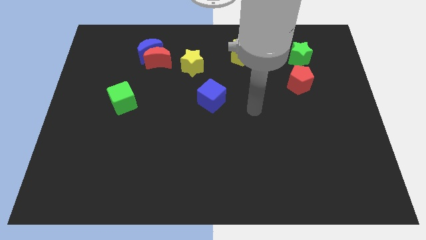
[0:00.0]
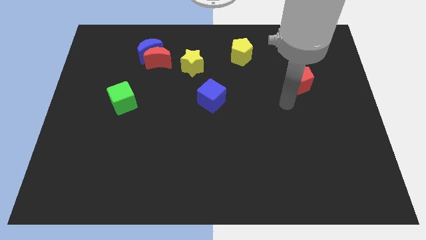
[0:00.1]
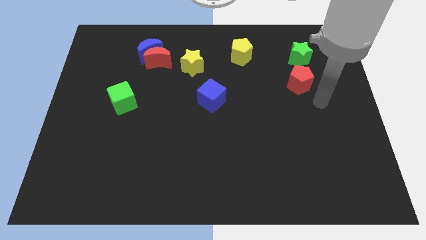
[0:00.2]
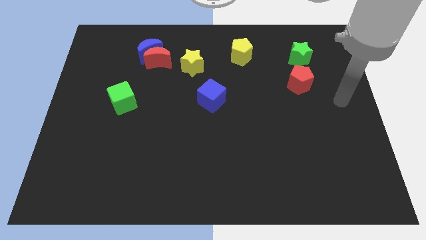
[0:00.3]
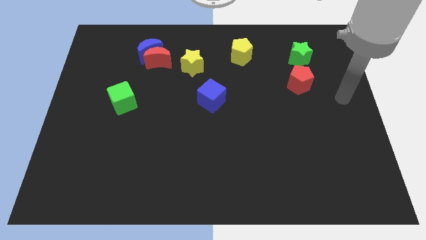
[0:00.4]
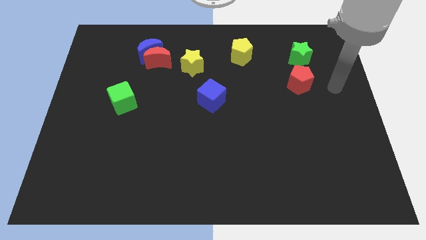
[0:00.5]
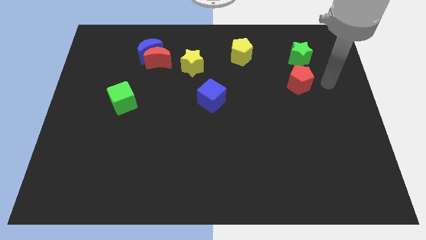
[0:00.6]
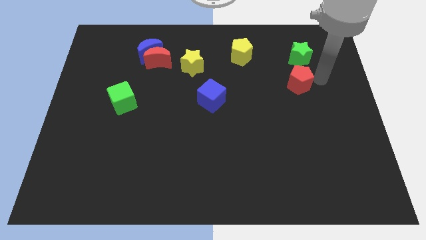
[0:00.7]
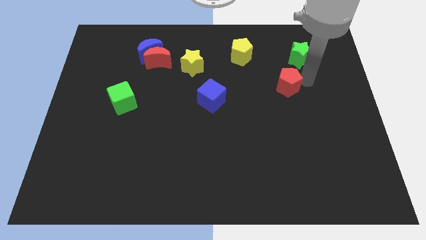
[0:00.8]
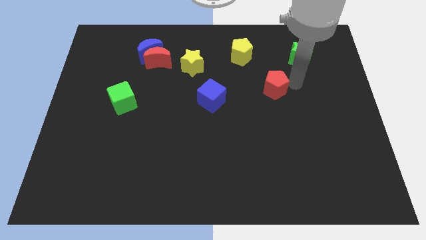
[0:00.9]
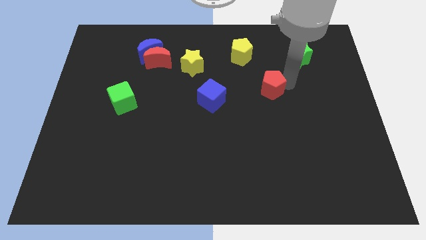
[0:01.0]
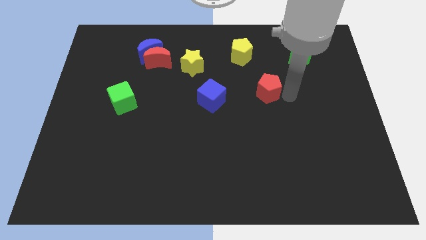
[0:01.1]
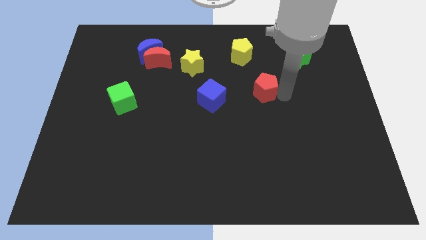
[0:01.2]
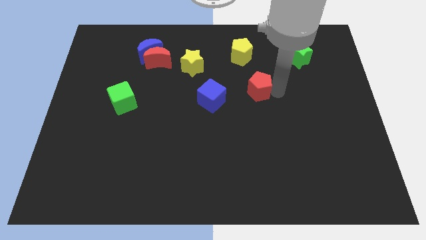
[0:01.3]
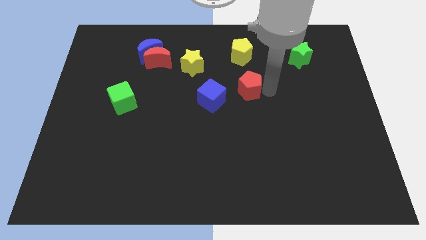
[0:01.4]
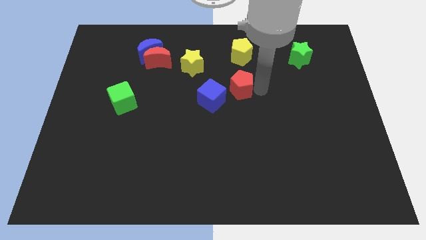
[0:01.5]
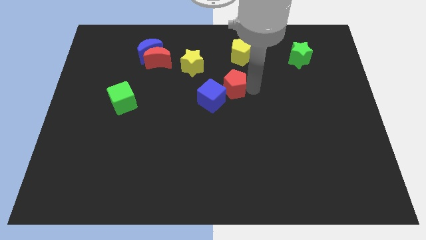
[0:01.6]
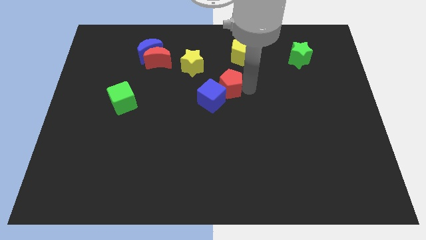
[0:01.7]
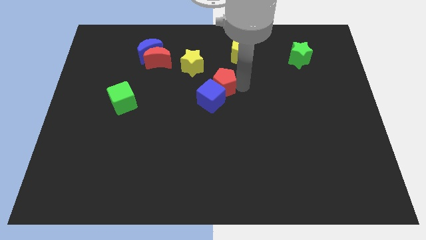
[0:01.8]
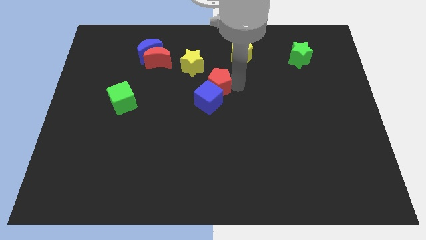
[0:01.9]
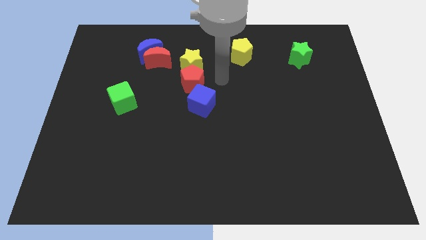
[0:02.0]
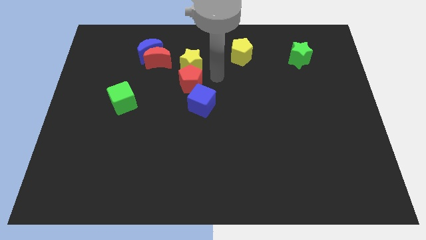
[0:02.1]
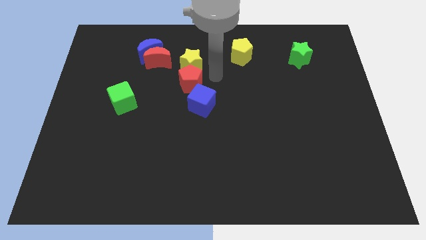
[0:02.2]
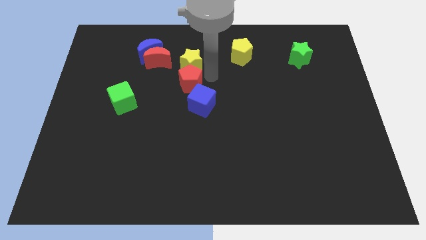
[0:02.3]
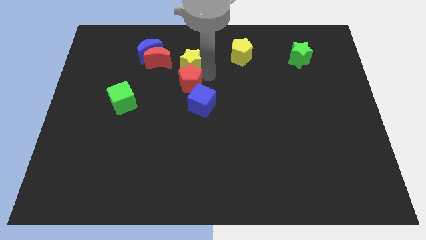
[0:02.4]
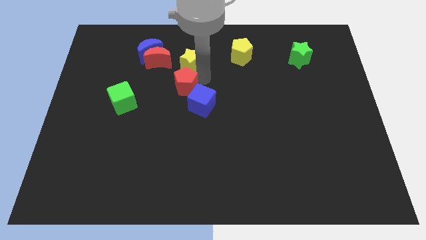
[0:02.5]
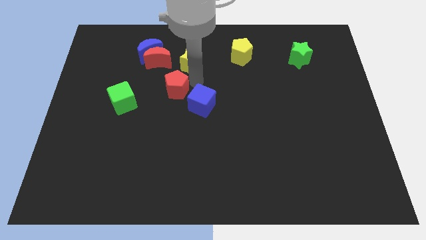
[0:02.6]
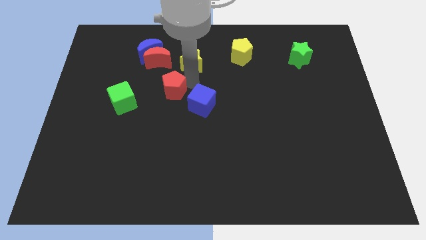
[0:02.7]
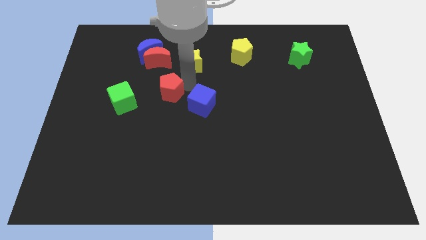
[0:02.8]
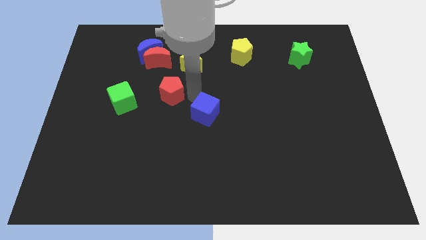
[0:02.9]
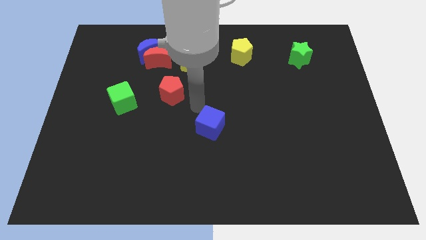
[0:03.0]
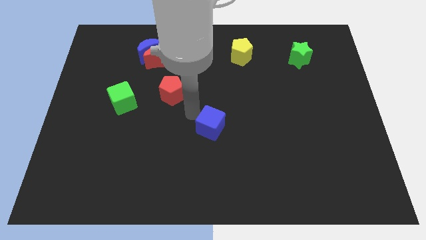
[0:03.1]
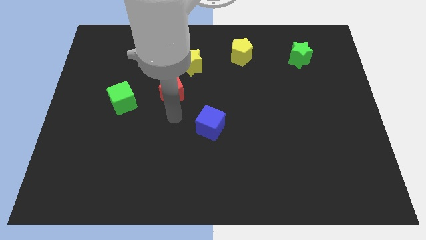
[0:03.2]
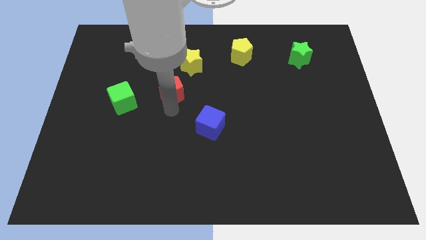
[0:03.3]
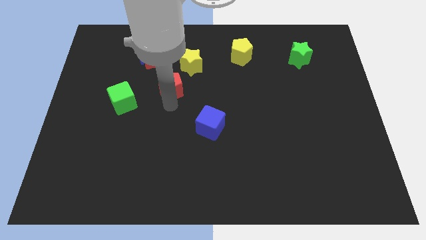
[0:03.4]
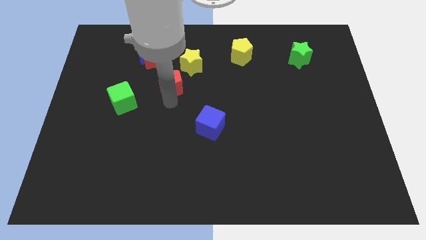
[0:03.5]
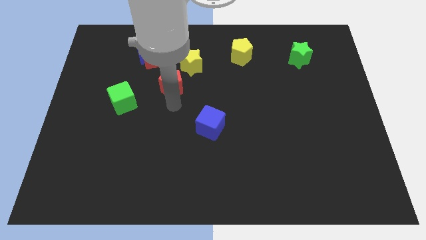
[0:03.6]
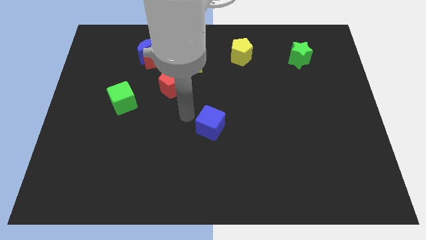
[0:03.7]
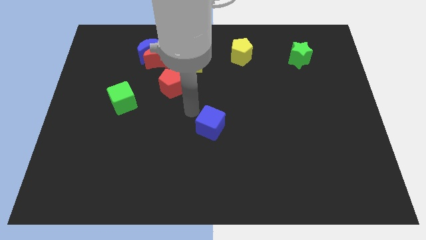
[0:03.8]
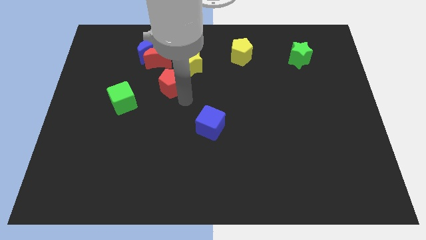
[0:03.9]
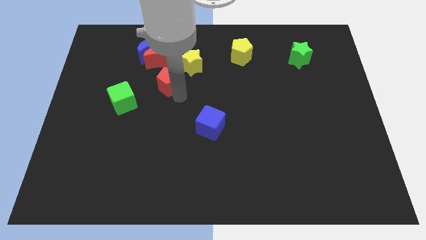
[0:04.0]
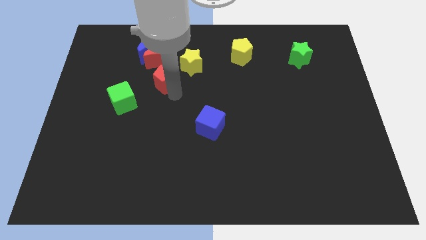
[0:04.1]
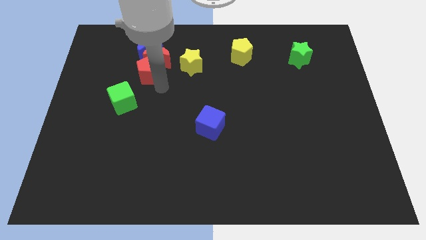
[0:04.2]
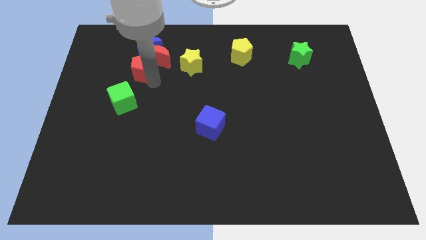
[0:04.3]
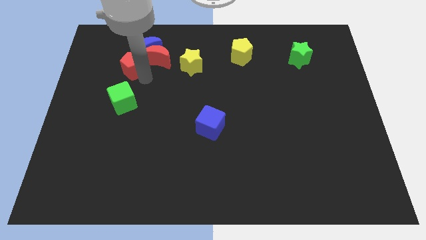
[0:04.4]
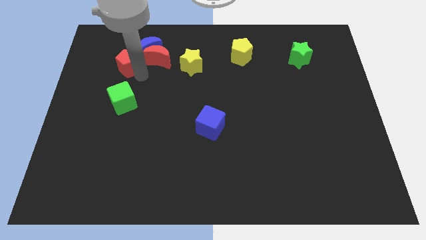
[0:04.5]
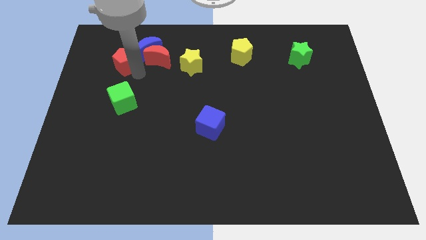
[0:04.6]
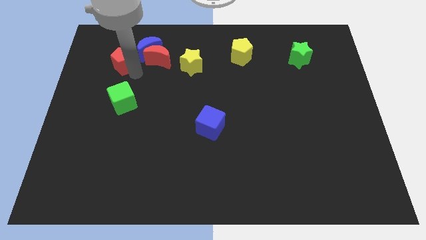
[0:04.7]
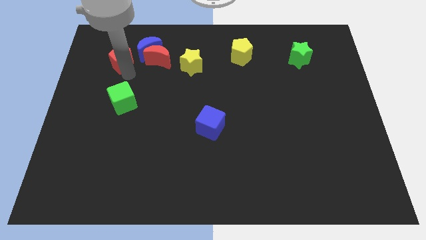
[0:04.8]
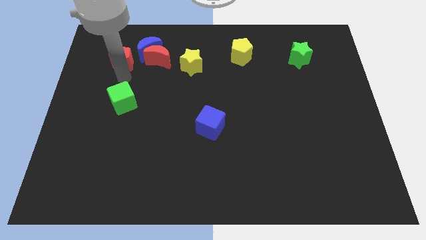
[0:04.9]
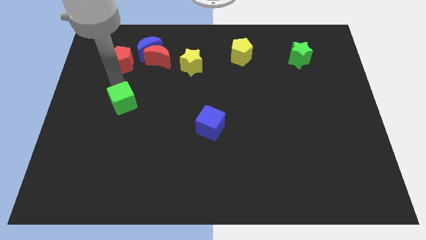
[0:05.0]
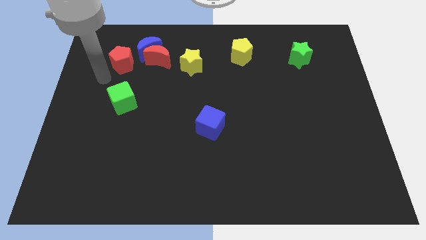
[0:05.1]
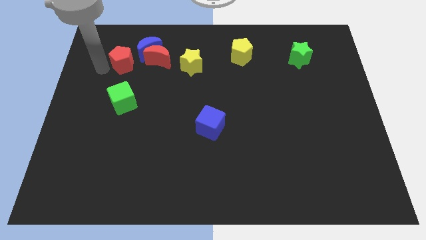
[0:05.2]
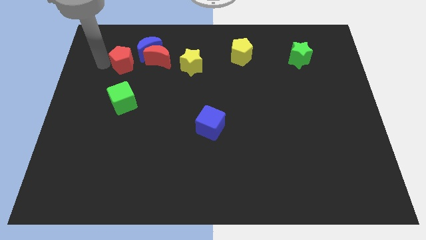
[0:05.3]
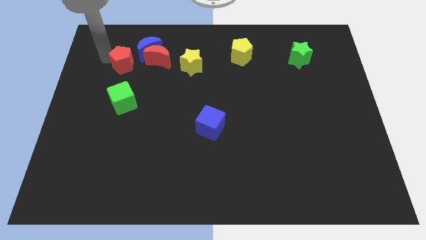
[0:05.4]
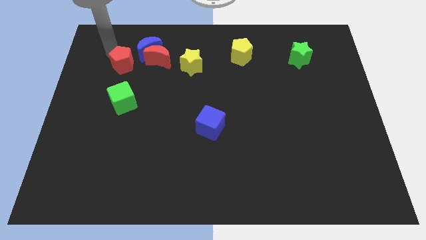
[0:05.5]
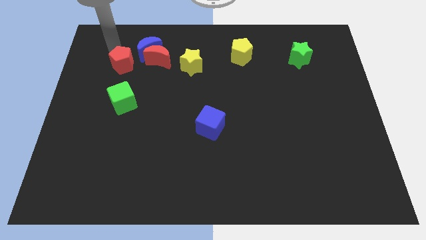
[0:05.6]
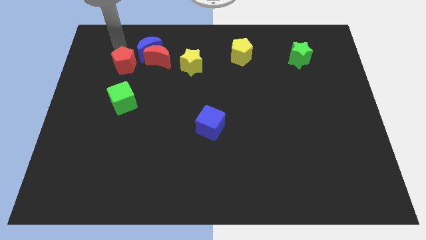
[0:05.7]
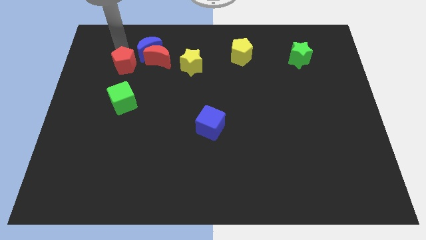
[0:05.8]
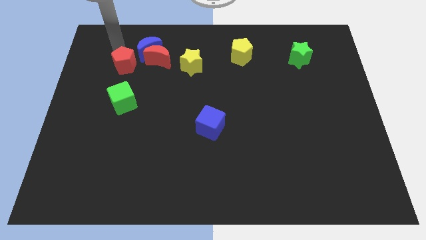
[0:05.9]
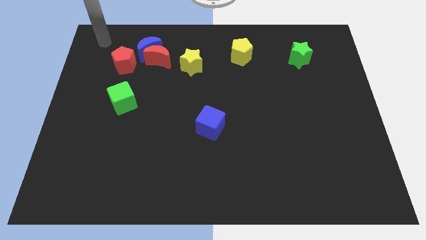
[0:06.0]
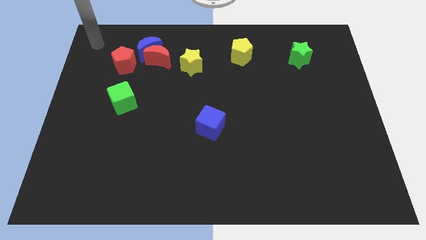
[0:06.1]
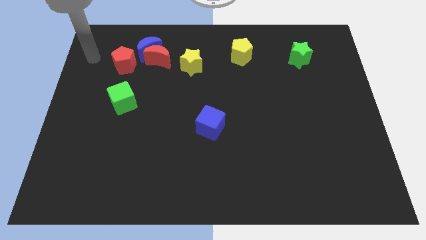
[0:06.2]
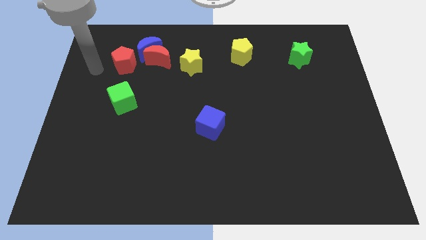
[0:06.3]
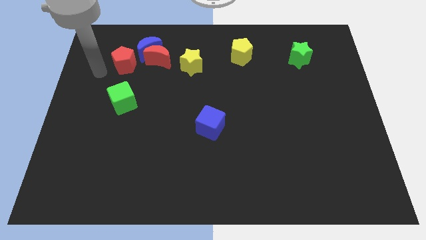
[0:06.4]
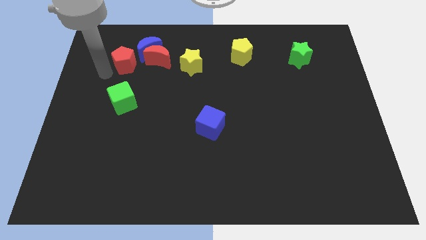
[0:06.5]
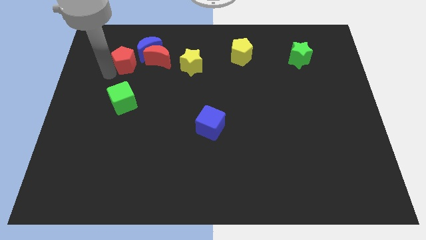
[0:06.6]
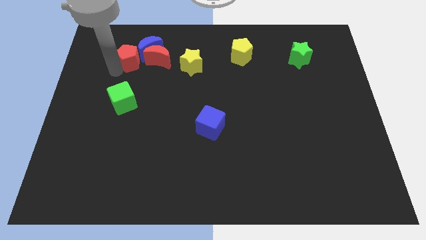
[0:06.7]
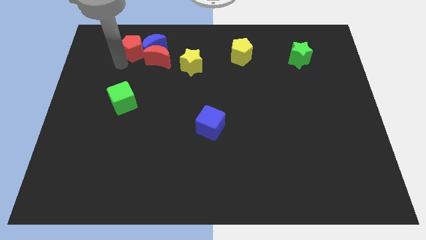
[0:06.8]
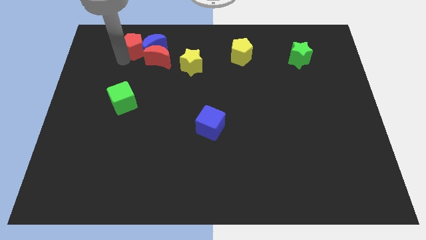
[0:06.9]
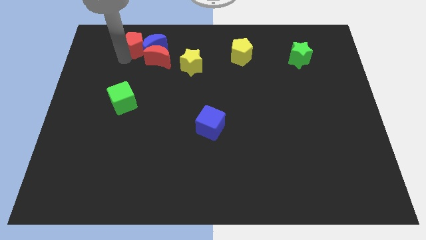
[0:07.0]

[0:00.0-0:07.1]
push the red pentagon to the blue moon

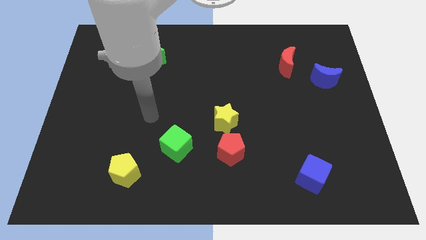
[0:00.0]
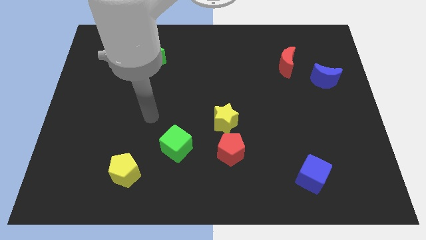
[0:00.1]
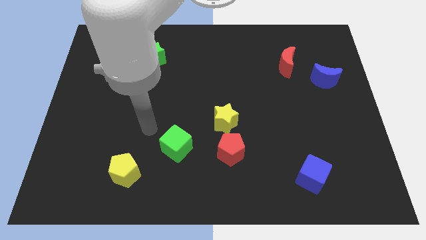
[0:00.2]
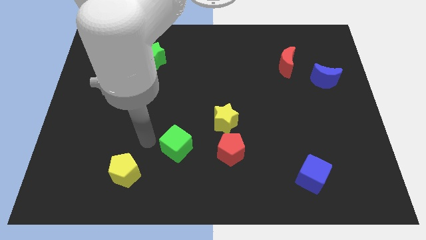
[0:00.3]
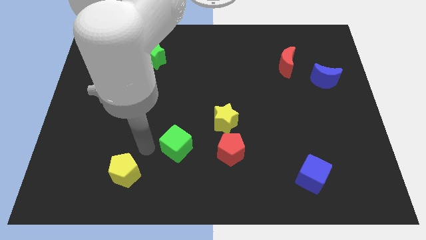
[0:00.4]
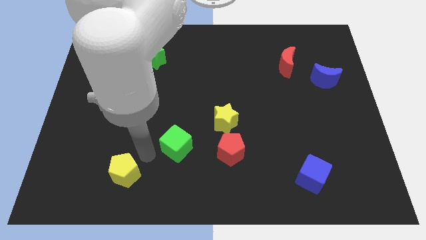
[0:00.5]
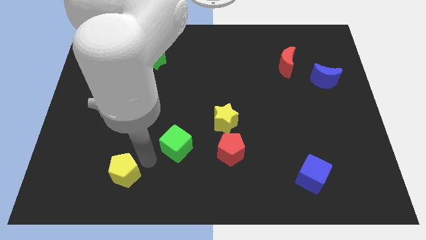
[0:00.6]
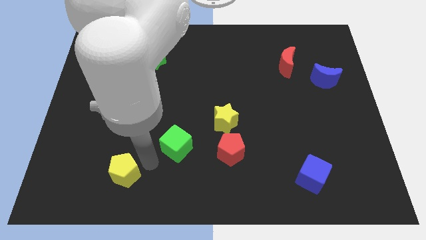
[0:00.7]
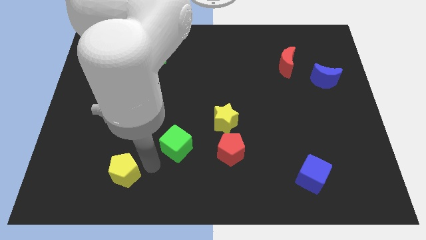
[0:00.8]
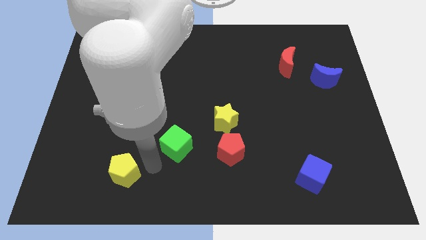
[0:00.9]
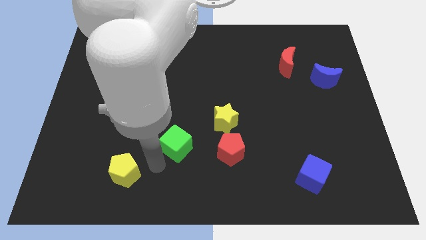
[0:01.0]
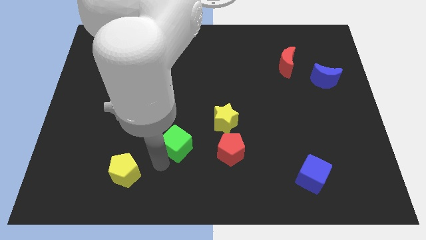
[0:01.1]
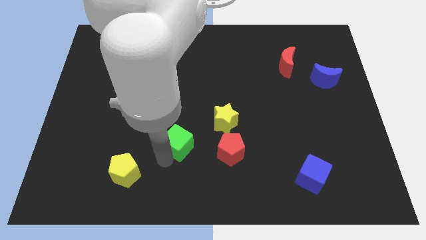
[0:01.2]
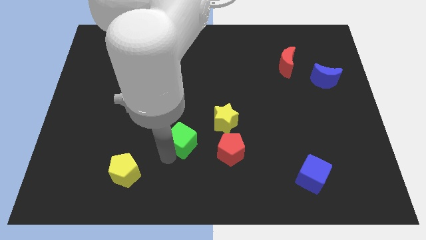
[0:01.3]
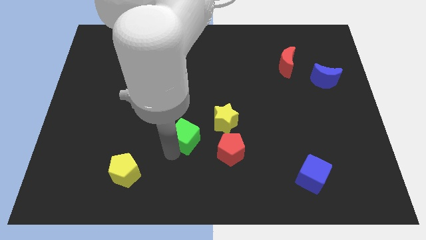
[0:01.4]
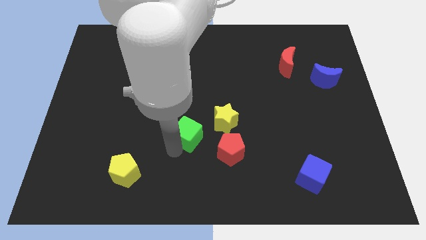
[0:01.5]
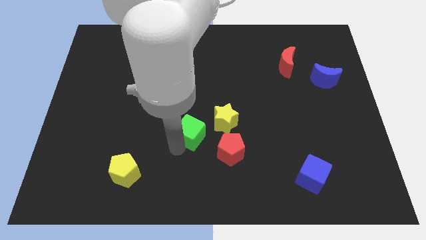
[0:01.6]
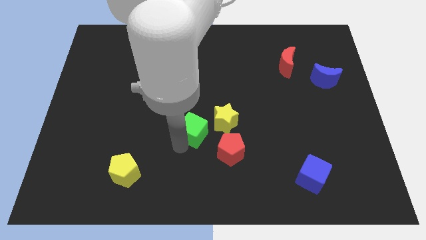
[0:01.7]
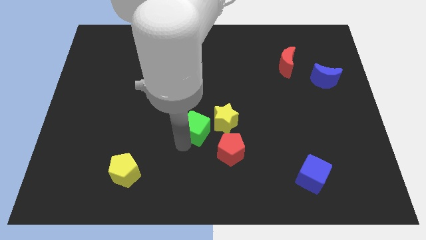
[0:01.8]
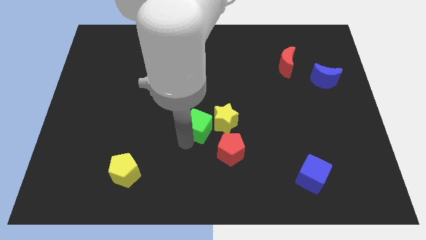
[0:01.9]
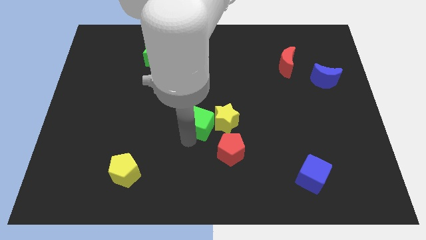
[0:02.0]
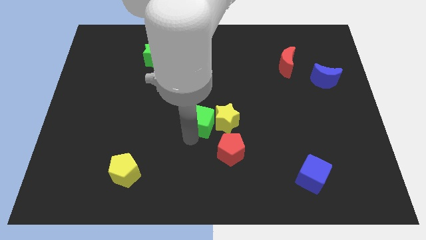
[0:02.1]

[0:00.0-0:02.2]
push the green cube towards the yellow star
